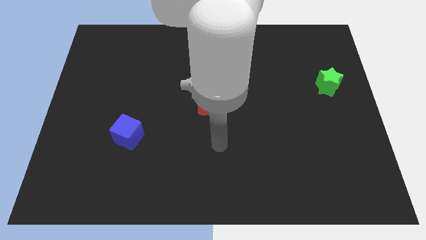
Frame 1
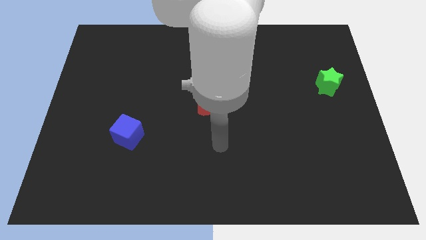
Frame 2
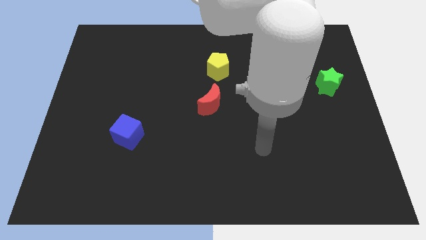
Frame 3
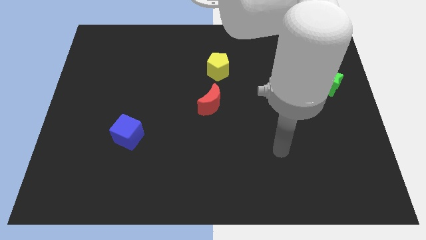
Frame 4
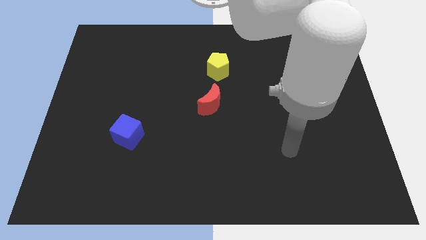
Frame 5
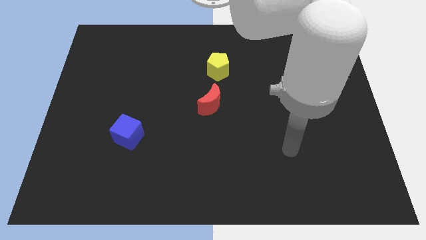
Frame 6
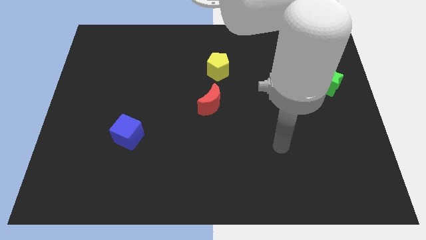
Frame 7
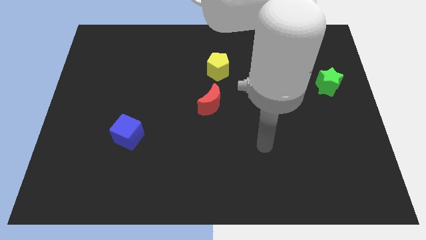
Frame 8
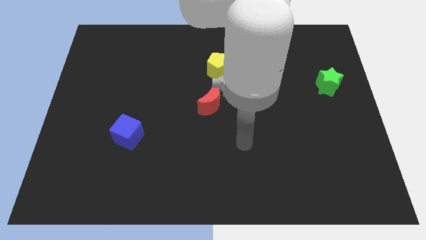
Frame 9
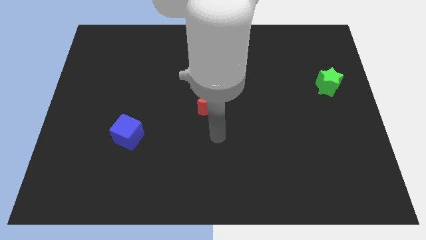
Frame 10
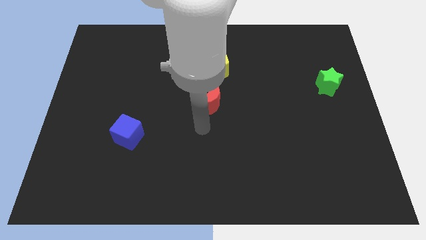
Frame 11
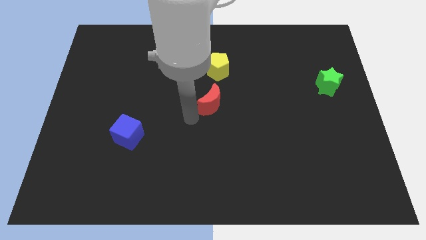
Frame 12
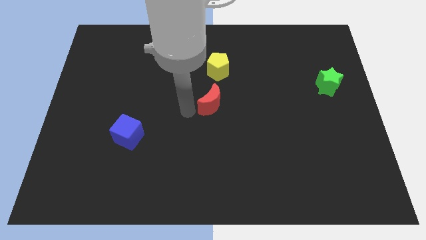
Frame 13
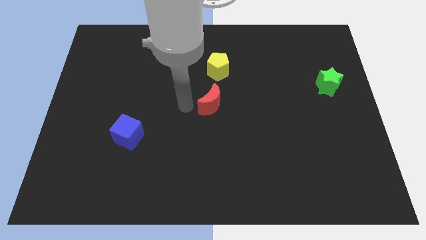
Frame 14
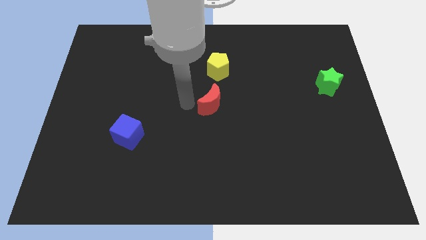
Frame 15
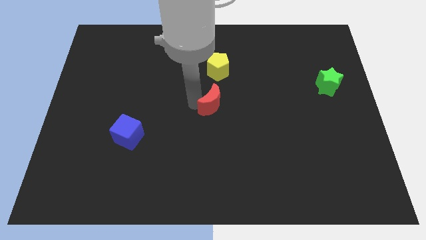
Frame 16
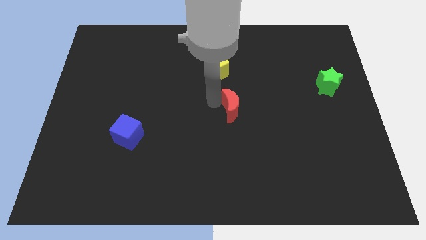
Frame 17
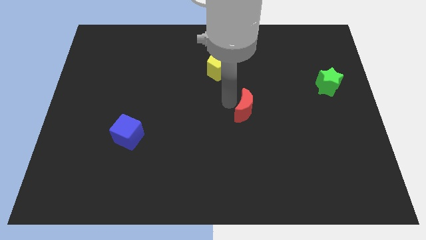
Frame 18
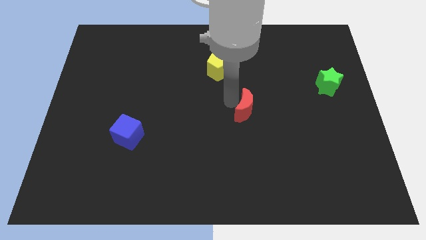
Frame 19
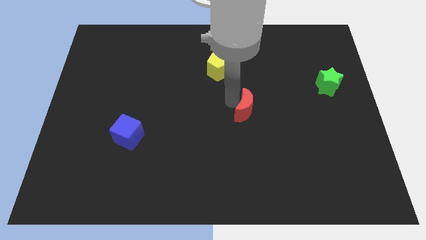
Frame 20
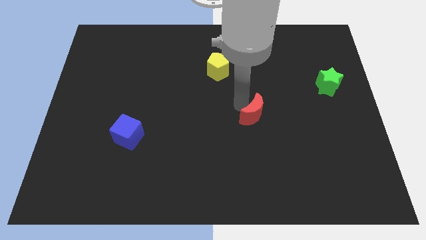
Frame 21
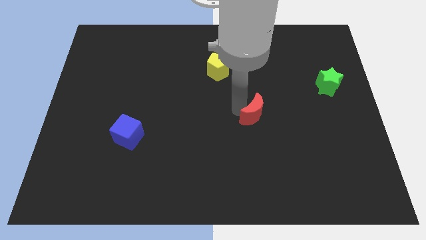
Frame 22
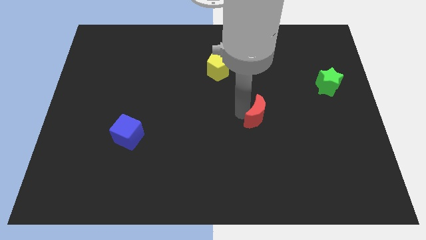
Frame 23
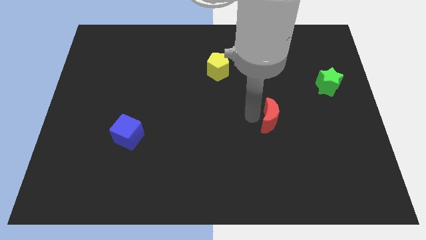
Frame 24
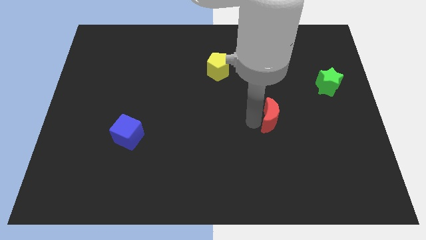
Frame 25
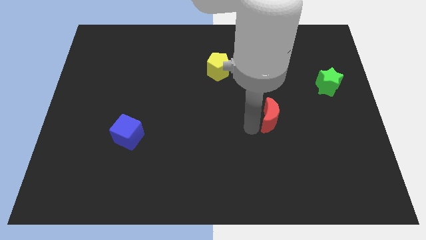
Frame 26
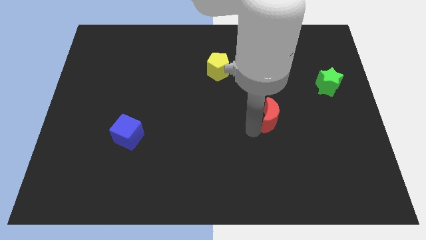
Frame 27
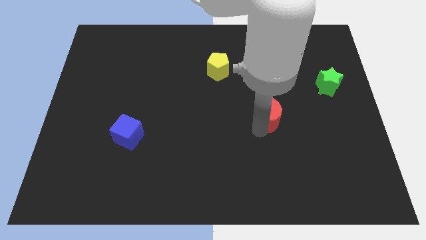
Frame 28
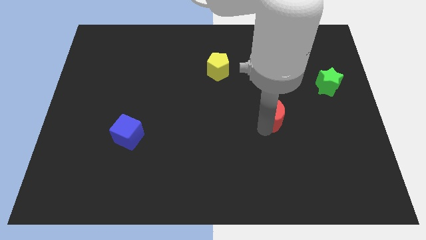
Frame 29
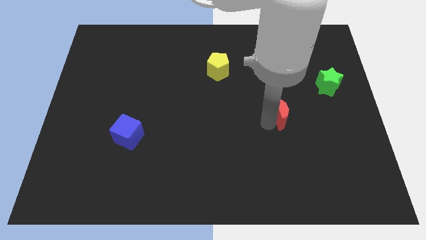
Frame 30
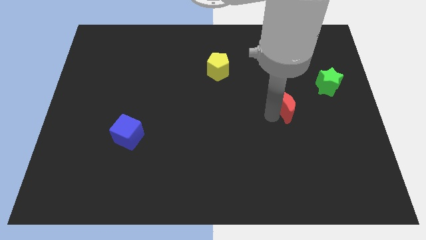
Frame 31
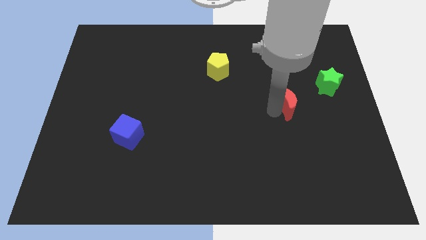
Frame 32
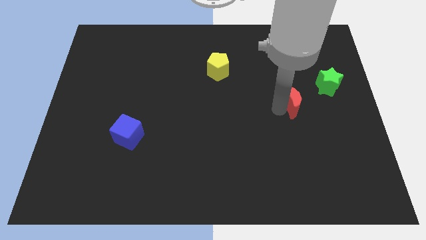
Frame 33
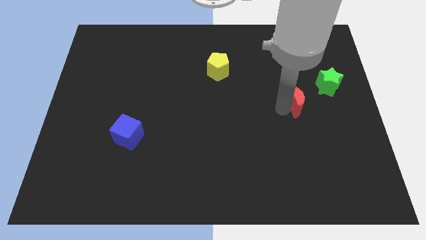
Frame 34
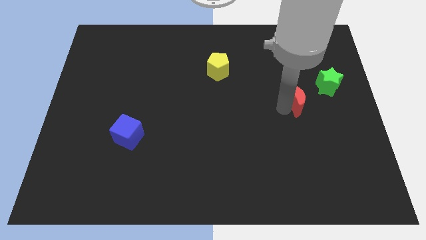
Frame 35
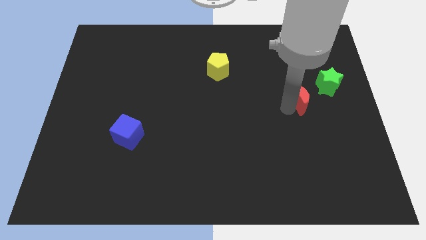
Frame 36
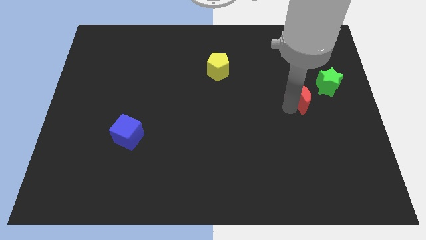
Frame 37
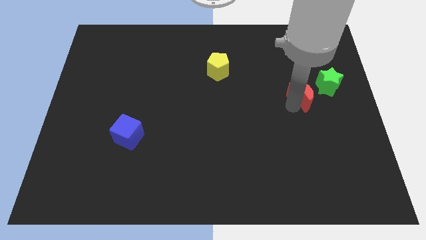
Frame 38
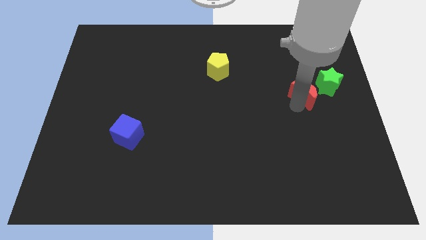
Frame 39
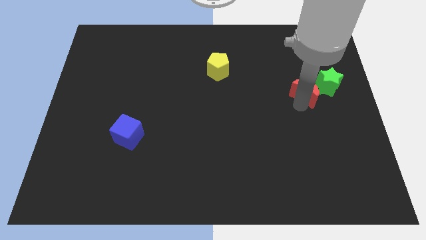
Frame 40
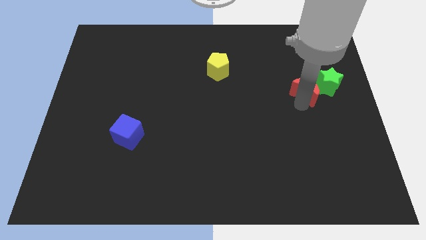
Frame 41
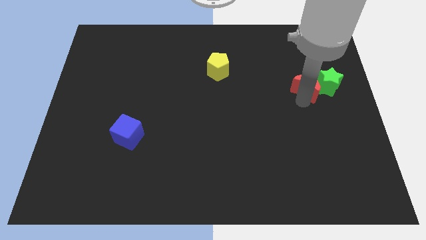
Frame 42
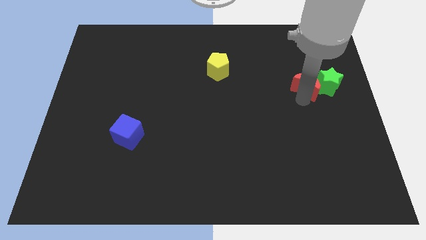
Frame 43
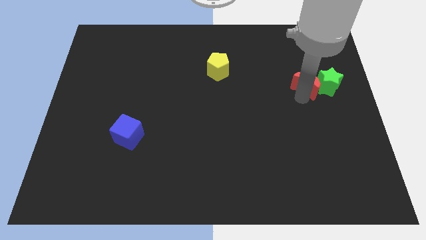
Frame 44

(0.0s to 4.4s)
move the moon towards the green block

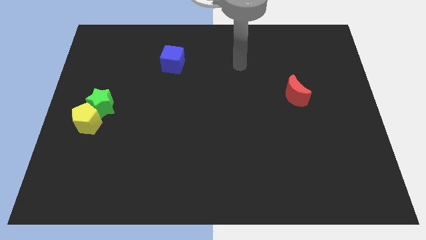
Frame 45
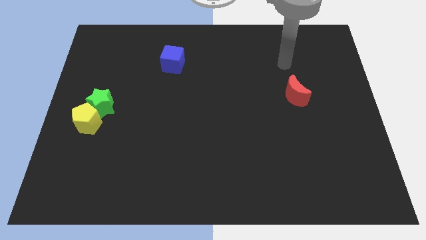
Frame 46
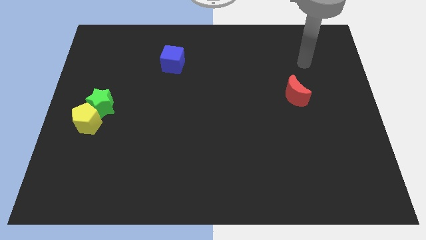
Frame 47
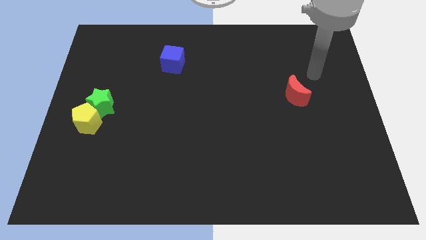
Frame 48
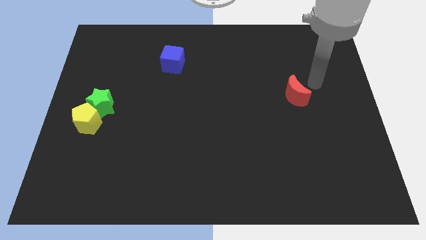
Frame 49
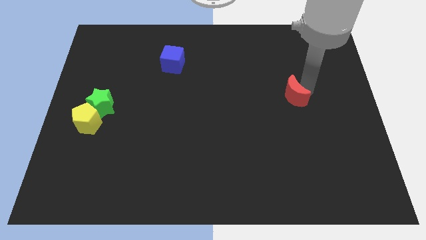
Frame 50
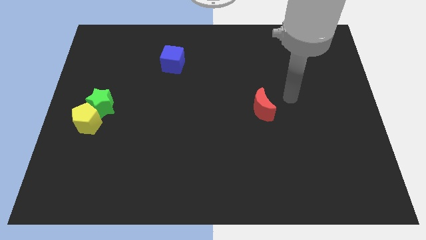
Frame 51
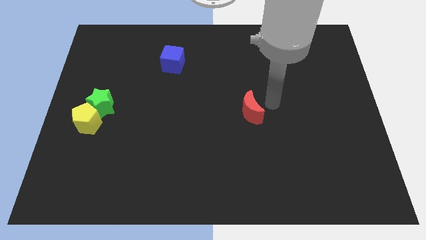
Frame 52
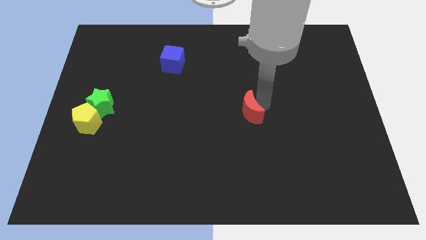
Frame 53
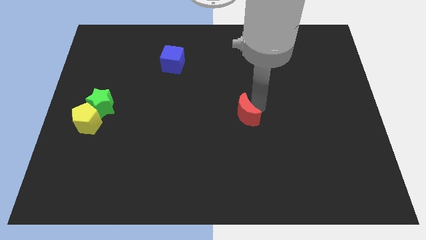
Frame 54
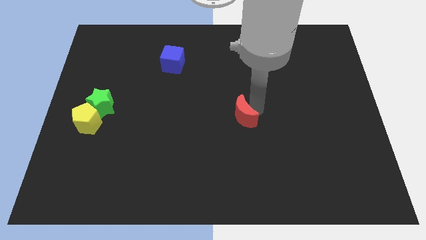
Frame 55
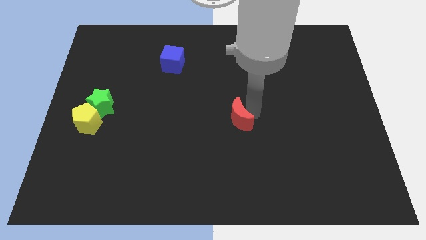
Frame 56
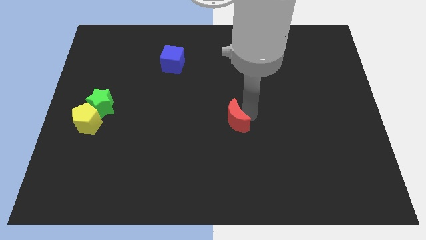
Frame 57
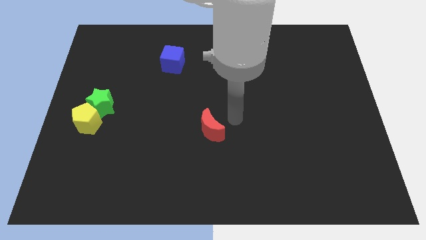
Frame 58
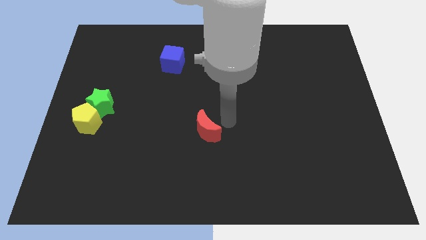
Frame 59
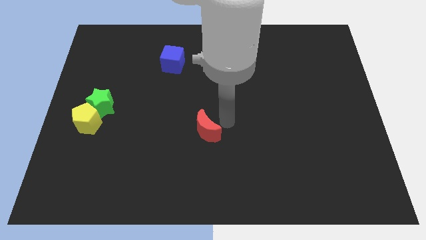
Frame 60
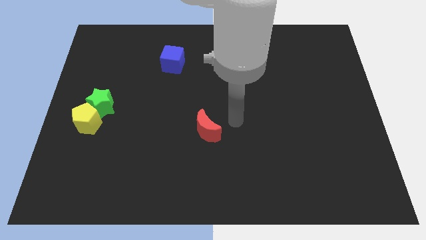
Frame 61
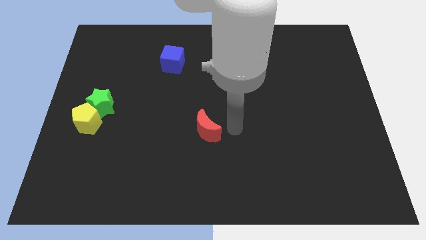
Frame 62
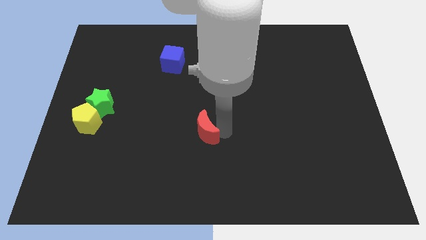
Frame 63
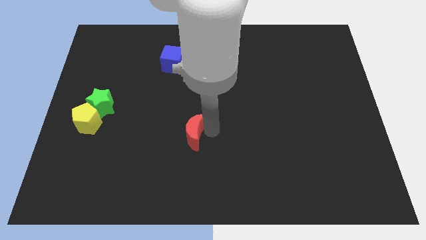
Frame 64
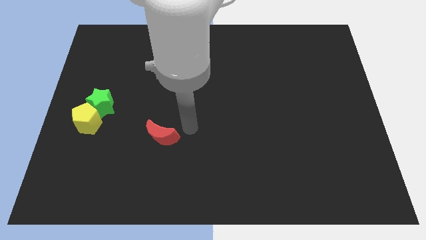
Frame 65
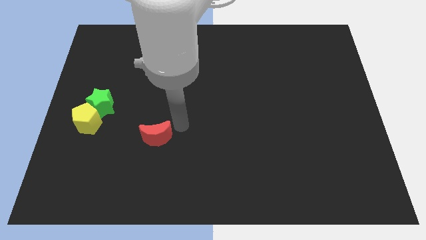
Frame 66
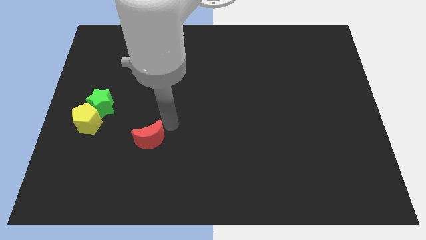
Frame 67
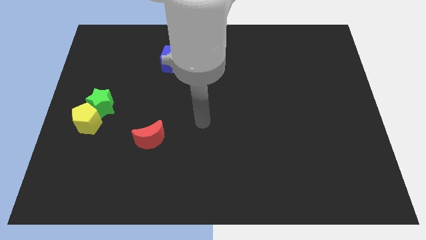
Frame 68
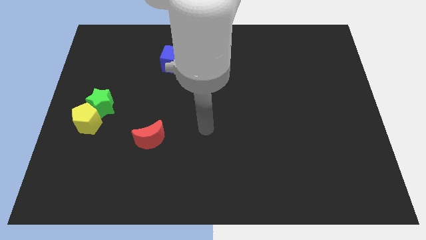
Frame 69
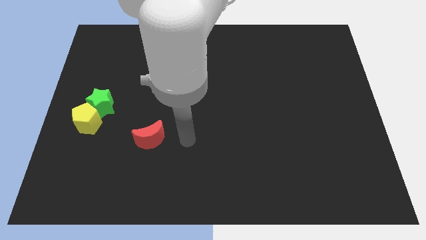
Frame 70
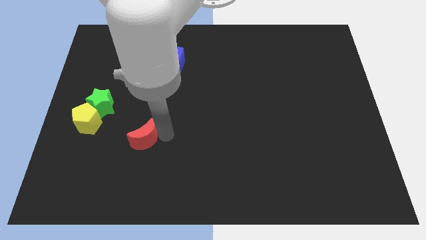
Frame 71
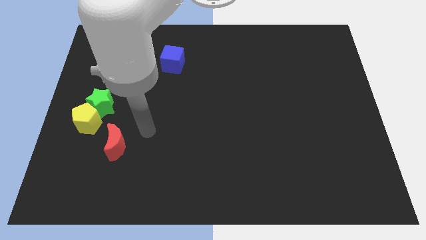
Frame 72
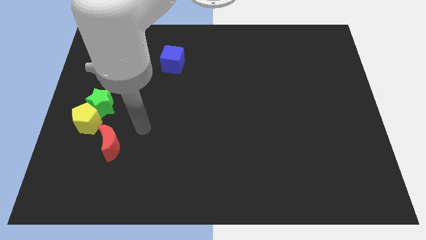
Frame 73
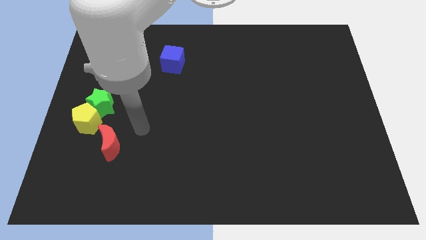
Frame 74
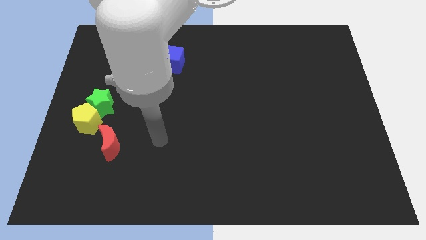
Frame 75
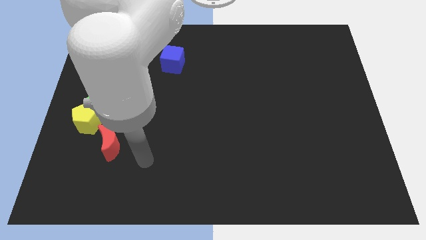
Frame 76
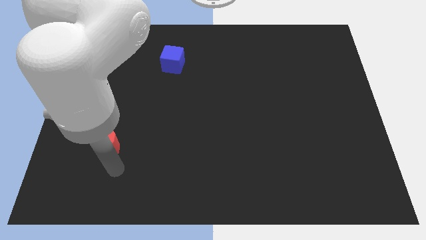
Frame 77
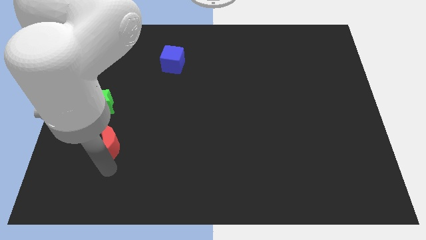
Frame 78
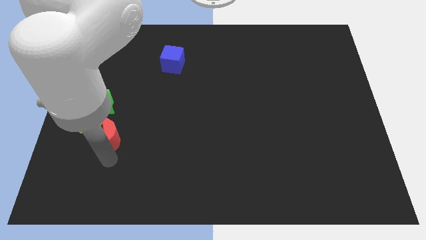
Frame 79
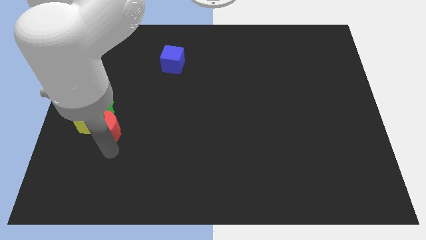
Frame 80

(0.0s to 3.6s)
slide the moon next to the pentagon

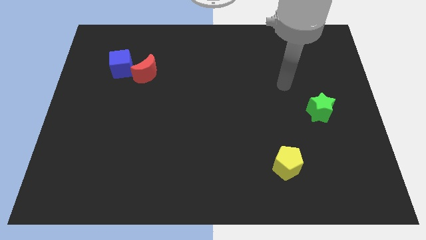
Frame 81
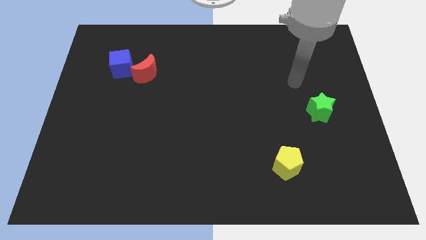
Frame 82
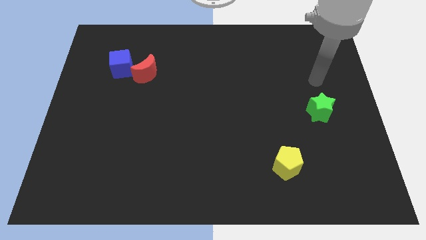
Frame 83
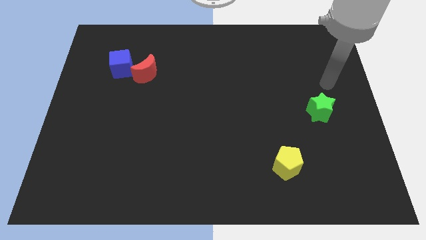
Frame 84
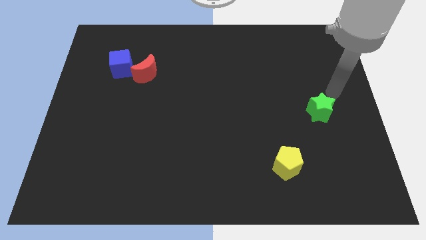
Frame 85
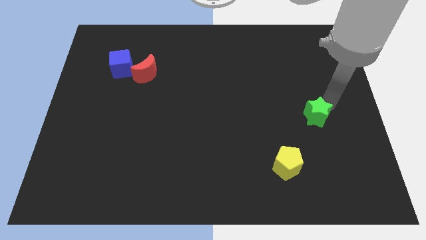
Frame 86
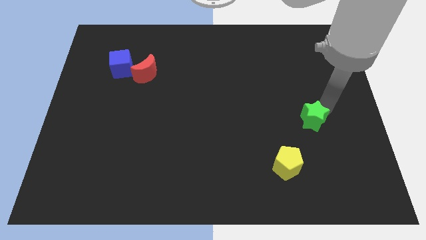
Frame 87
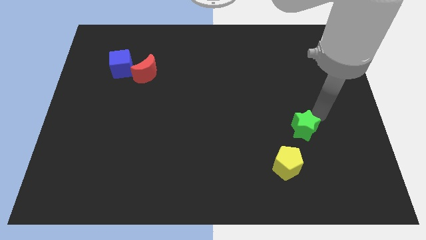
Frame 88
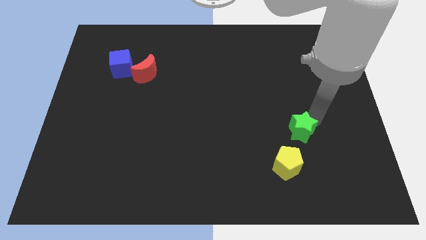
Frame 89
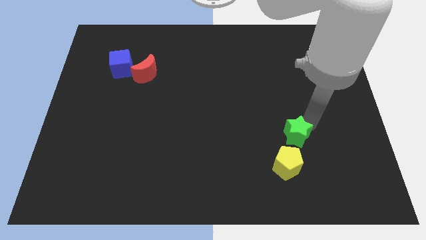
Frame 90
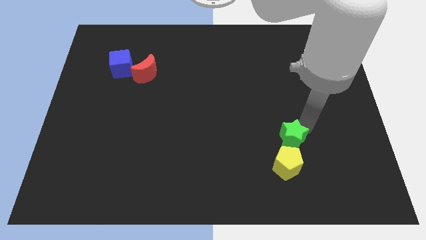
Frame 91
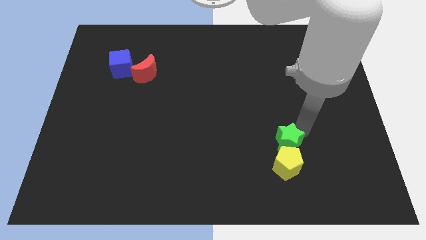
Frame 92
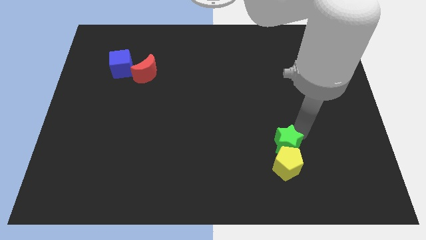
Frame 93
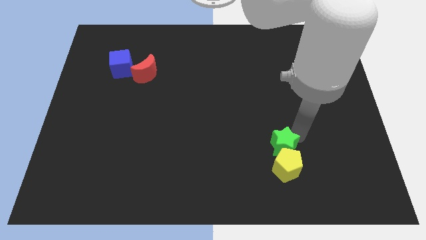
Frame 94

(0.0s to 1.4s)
put the star towards the pentagon
